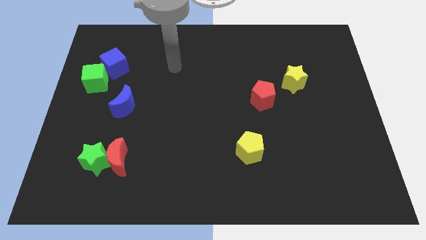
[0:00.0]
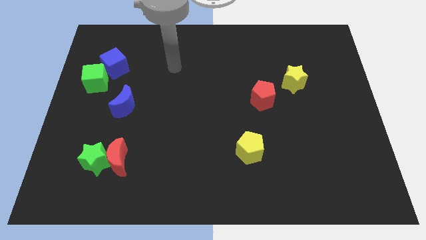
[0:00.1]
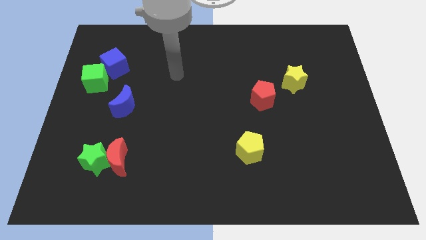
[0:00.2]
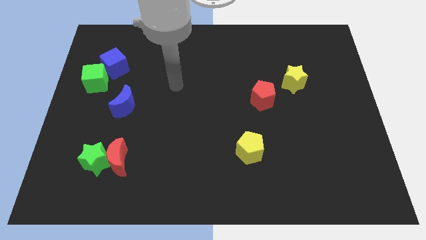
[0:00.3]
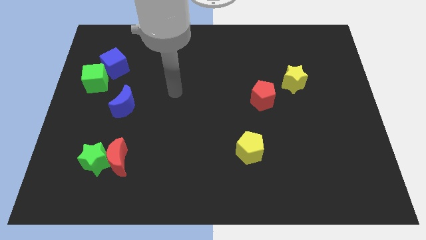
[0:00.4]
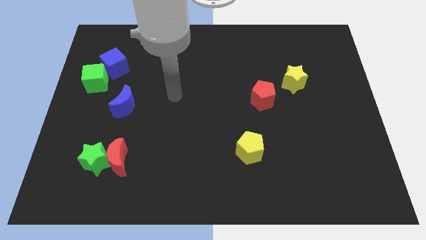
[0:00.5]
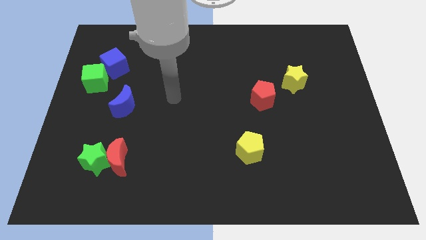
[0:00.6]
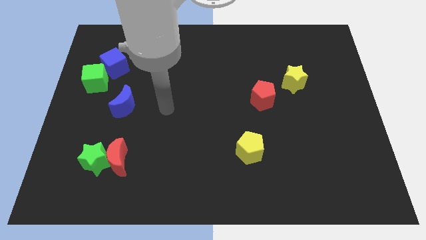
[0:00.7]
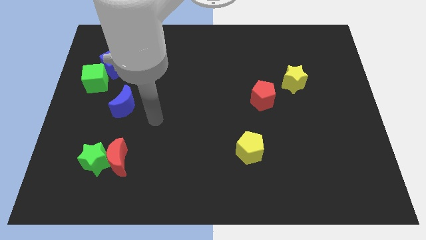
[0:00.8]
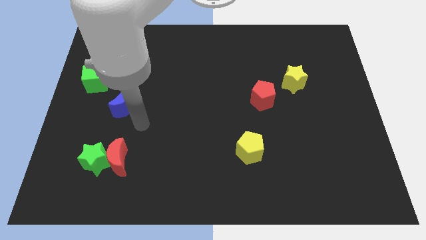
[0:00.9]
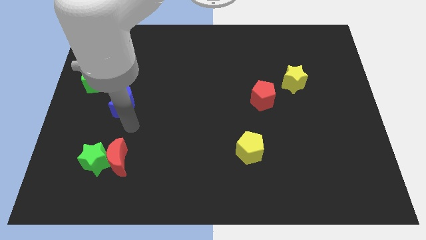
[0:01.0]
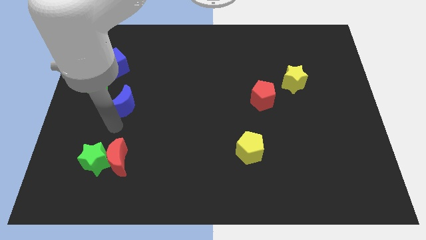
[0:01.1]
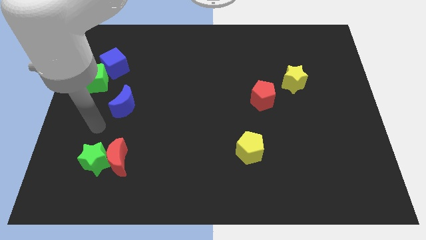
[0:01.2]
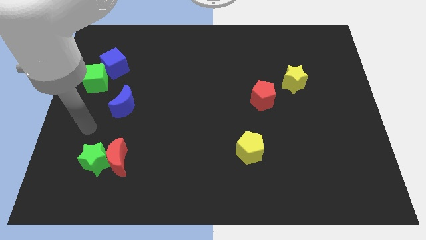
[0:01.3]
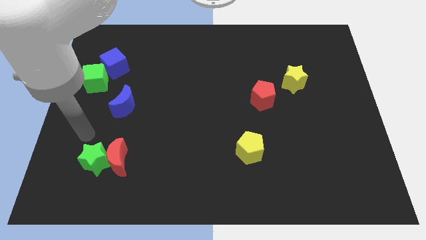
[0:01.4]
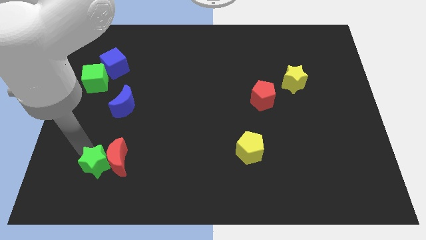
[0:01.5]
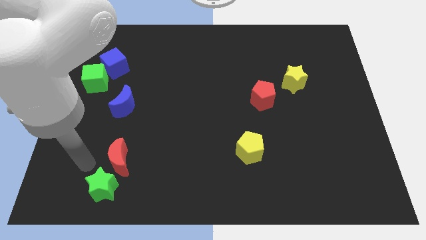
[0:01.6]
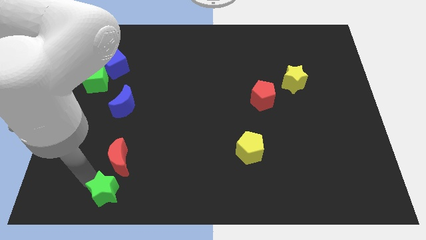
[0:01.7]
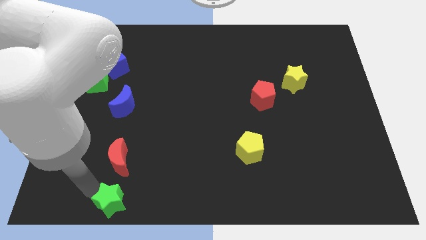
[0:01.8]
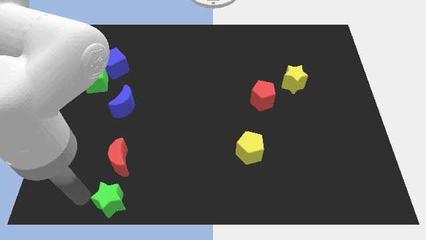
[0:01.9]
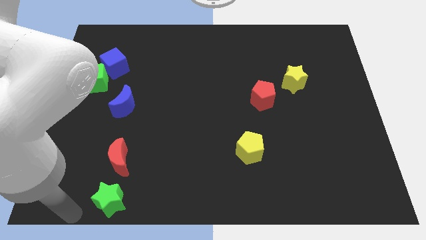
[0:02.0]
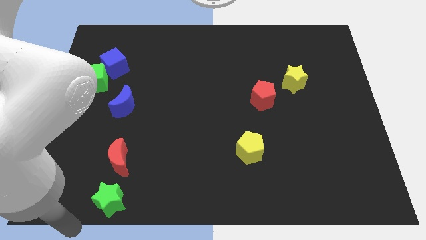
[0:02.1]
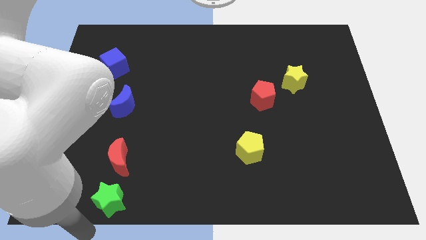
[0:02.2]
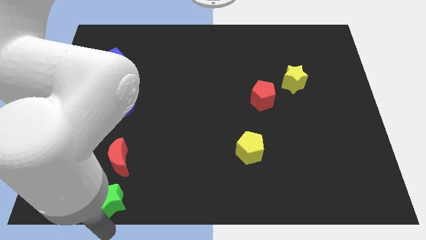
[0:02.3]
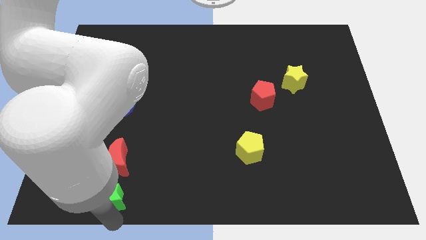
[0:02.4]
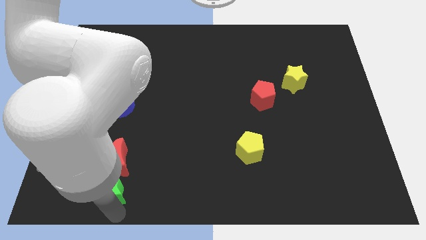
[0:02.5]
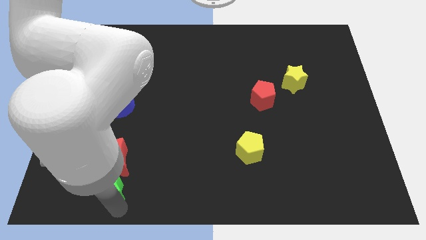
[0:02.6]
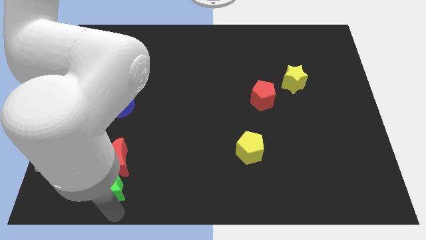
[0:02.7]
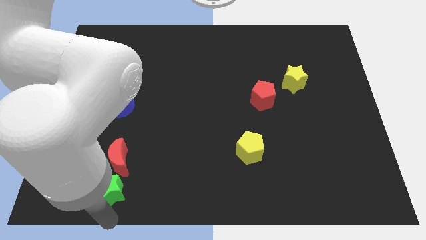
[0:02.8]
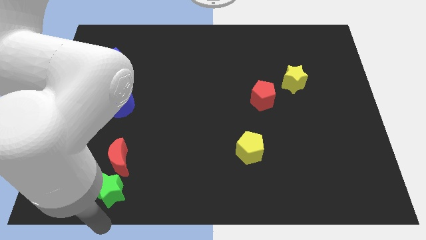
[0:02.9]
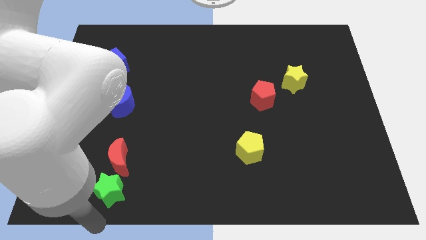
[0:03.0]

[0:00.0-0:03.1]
move green star to the bottom of red crescent

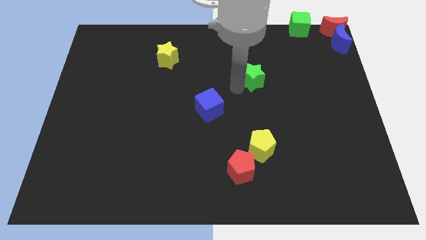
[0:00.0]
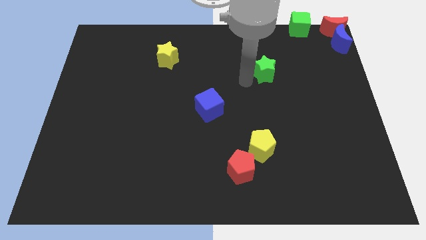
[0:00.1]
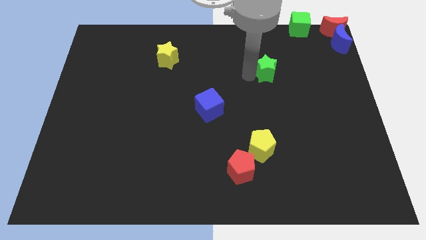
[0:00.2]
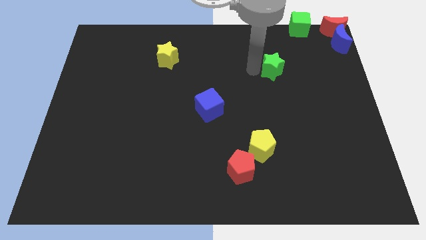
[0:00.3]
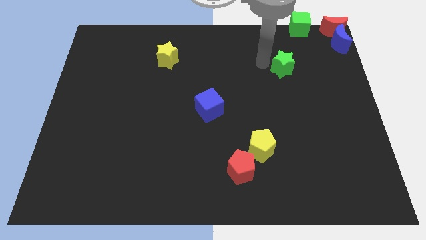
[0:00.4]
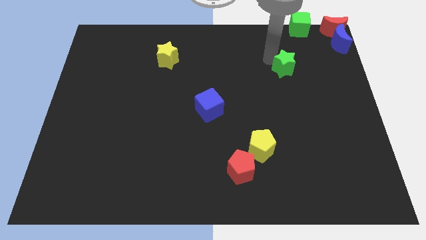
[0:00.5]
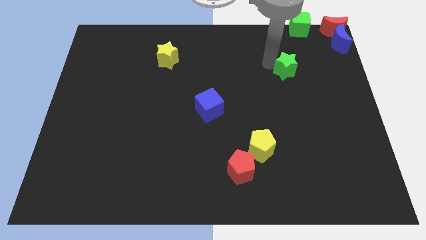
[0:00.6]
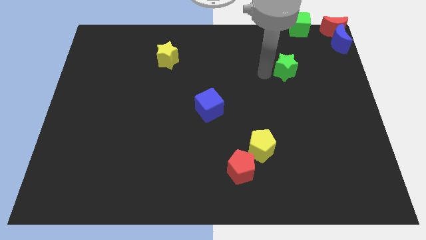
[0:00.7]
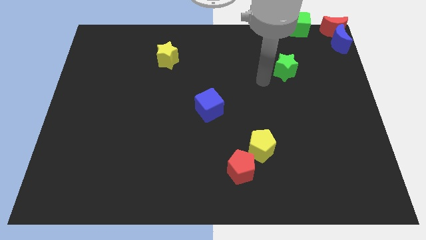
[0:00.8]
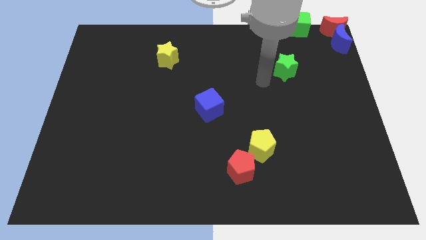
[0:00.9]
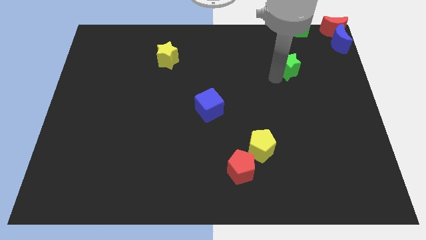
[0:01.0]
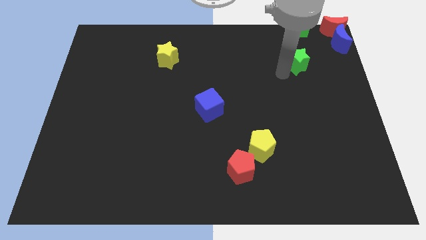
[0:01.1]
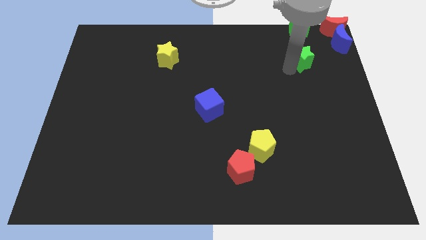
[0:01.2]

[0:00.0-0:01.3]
move the green star vertically below the green cube

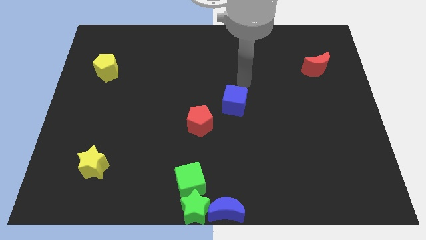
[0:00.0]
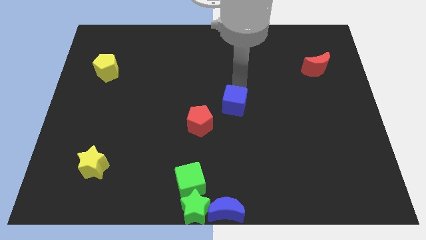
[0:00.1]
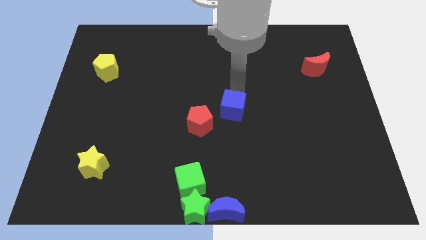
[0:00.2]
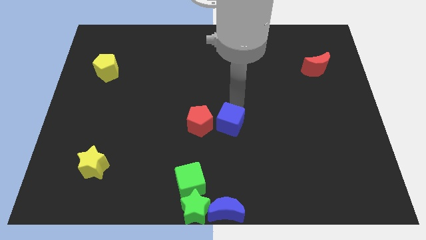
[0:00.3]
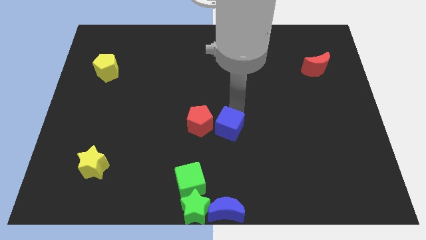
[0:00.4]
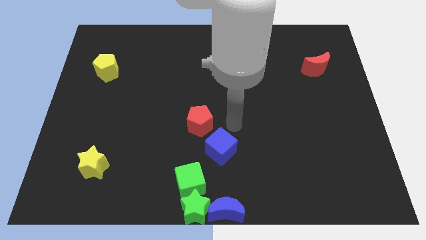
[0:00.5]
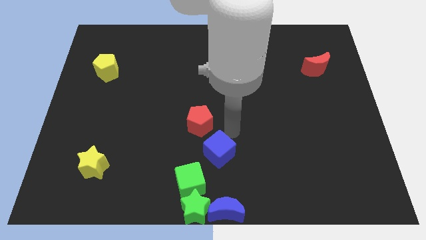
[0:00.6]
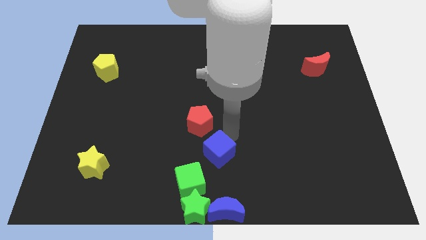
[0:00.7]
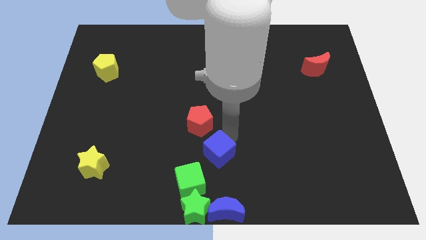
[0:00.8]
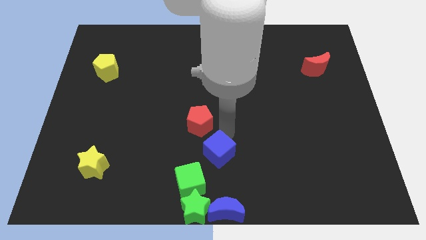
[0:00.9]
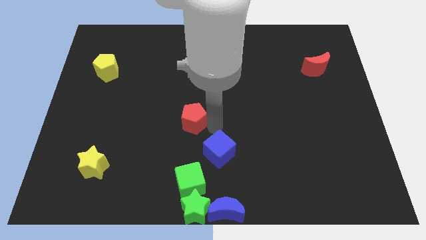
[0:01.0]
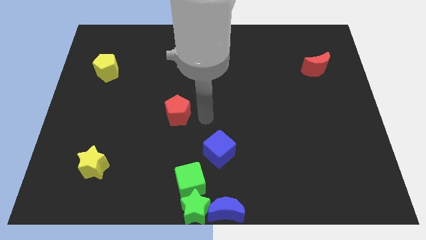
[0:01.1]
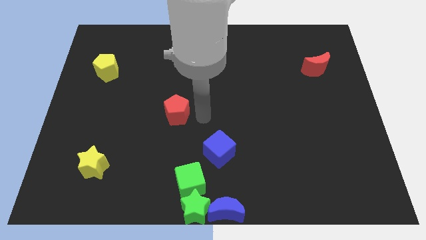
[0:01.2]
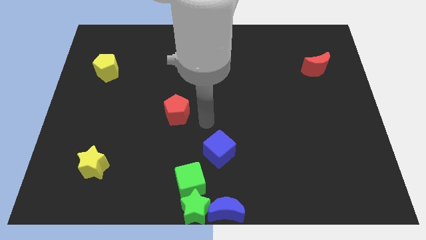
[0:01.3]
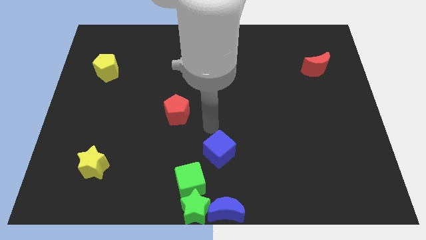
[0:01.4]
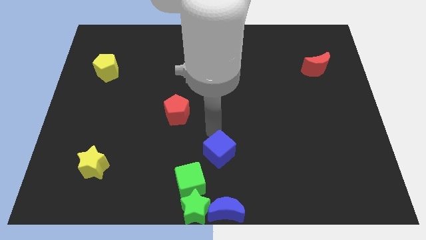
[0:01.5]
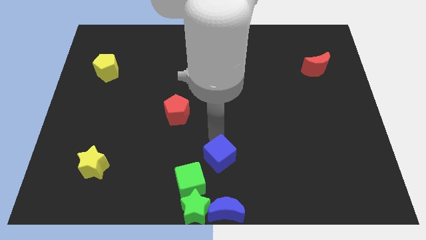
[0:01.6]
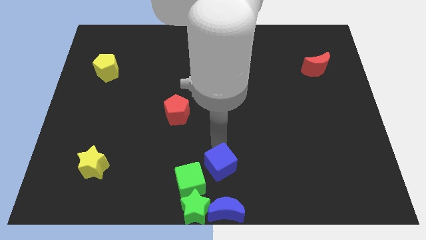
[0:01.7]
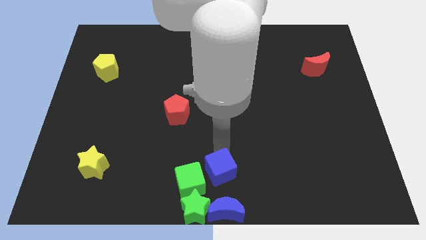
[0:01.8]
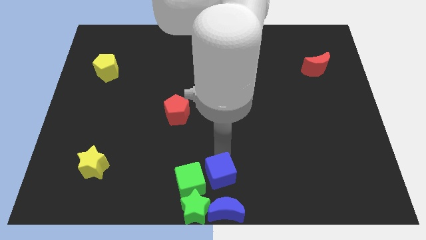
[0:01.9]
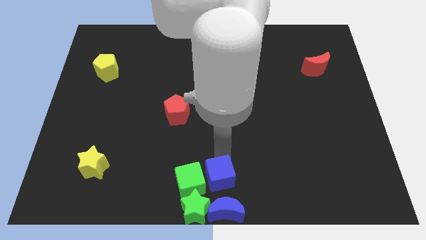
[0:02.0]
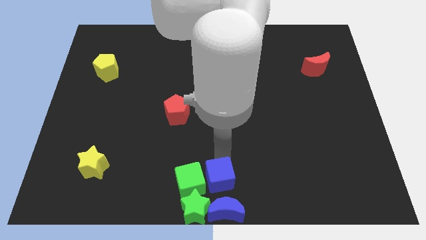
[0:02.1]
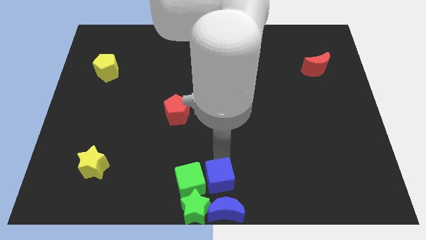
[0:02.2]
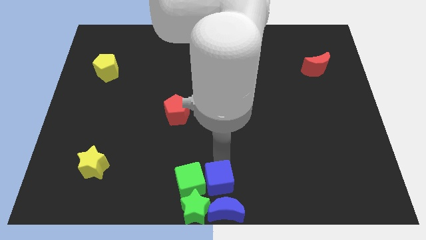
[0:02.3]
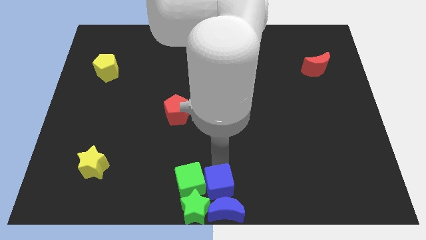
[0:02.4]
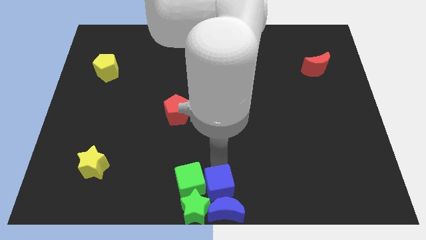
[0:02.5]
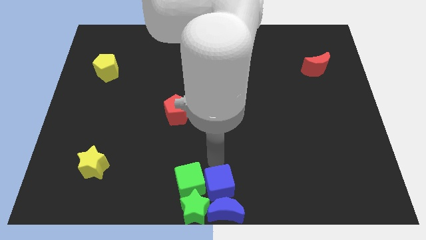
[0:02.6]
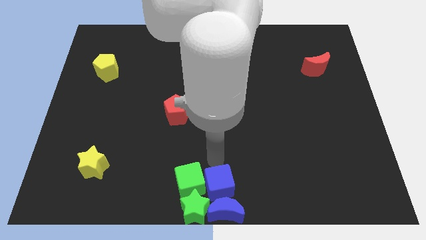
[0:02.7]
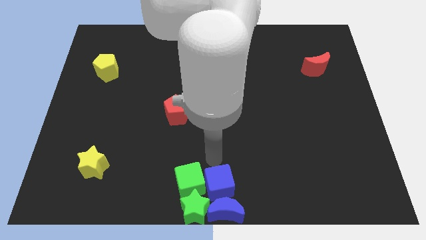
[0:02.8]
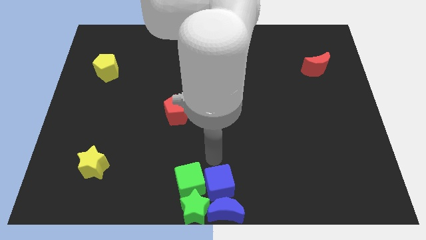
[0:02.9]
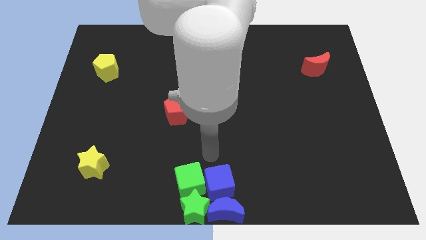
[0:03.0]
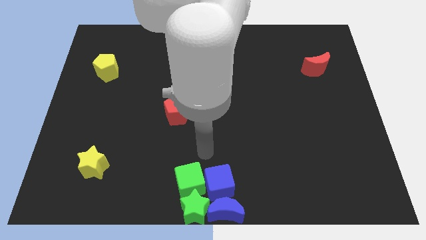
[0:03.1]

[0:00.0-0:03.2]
place the blue cube above the blue crescent

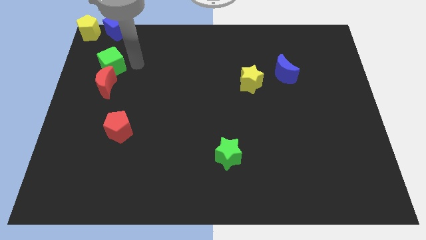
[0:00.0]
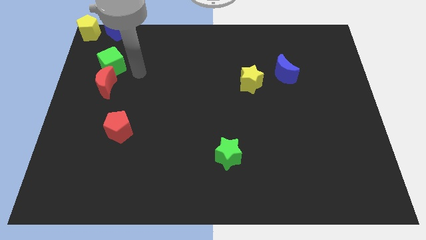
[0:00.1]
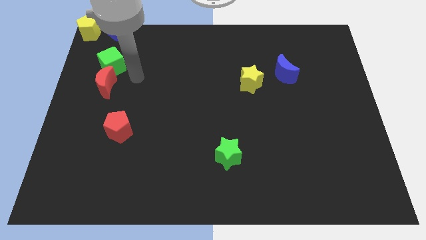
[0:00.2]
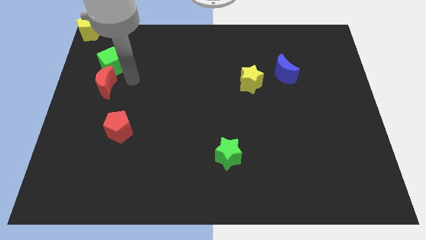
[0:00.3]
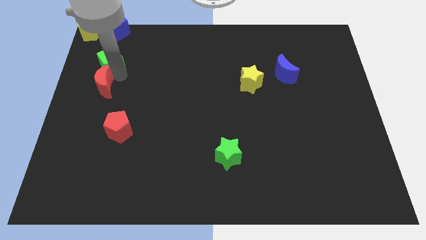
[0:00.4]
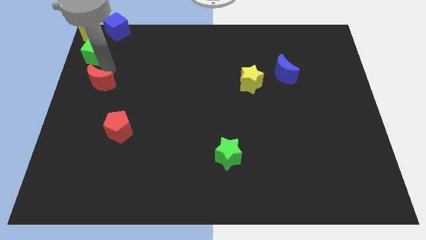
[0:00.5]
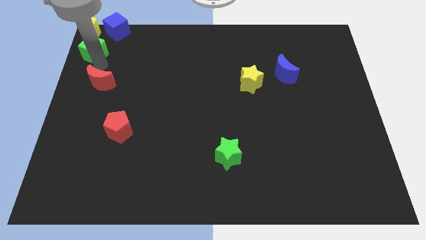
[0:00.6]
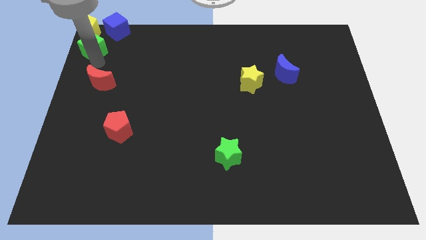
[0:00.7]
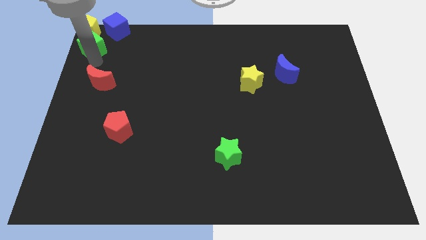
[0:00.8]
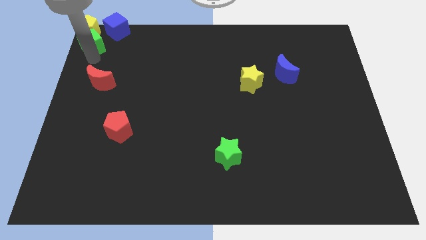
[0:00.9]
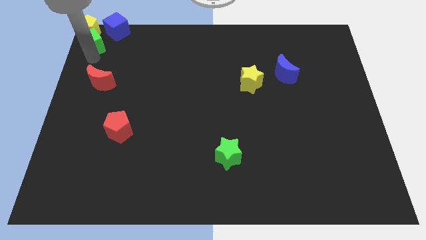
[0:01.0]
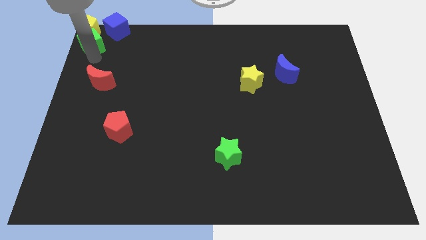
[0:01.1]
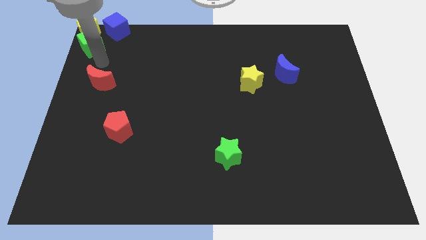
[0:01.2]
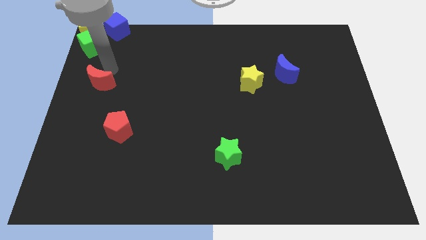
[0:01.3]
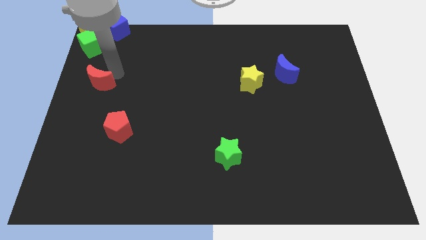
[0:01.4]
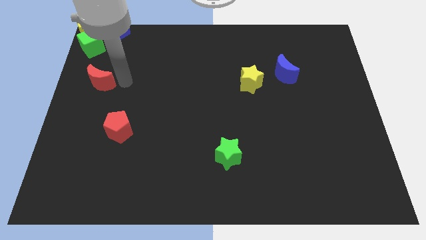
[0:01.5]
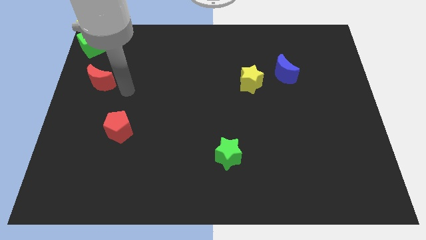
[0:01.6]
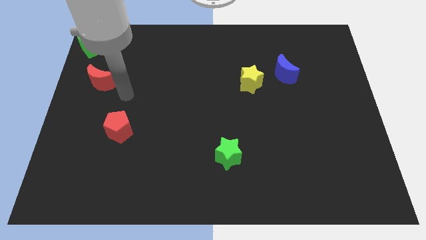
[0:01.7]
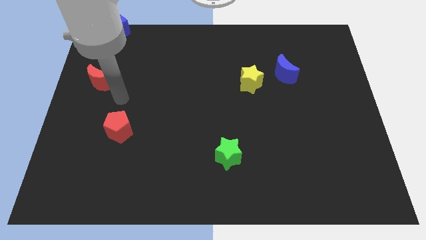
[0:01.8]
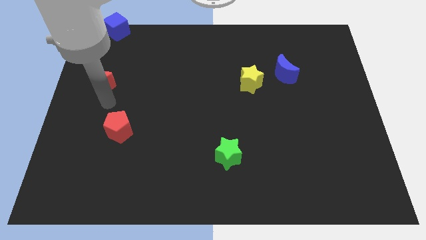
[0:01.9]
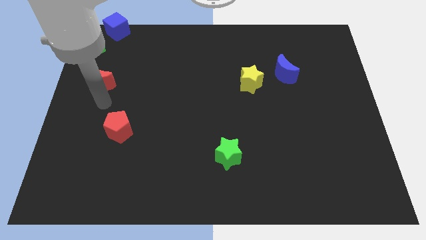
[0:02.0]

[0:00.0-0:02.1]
move the green cube to the bottom side of the yellow pentagon
